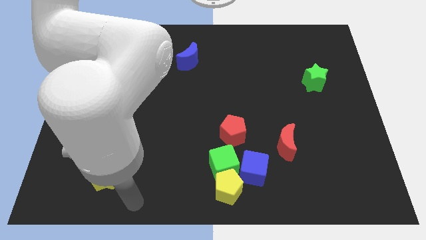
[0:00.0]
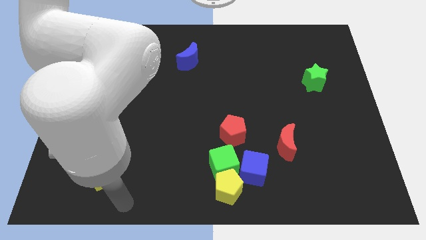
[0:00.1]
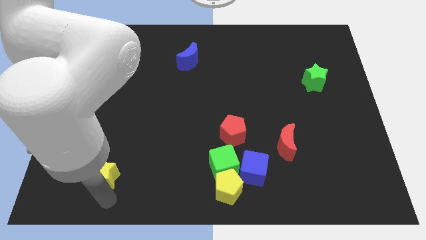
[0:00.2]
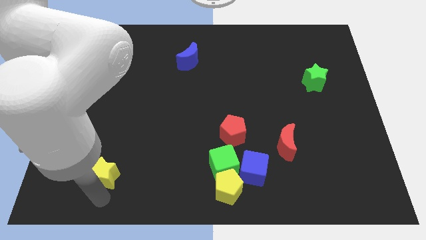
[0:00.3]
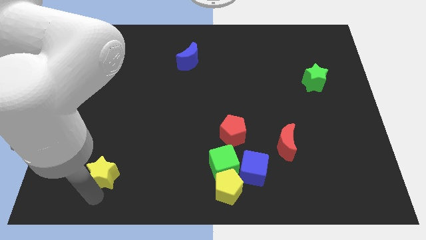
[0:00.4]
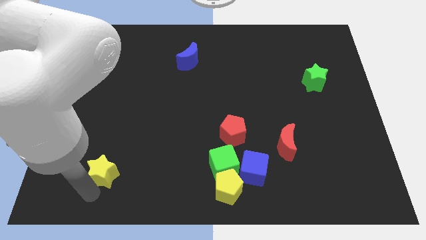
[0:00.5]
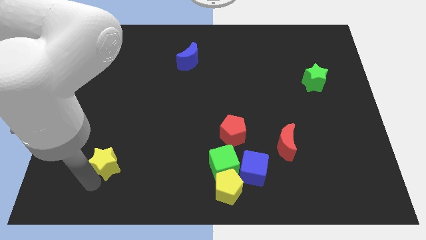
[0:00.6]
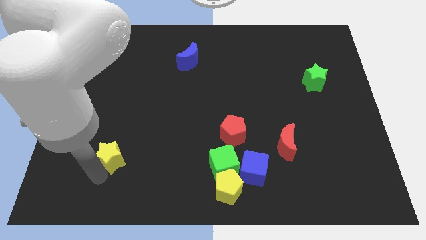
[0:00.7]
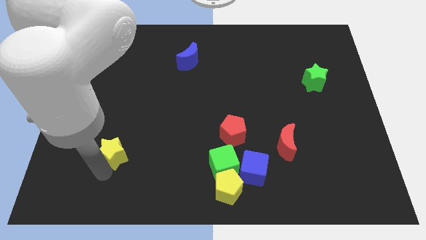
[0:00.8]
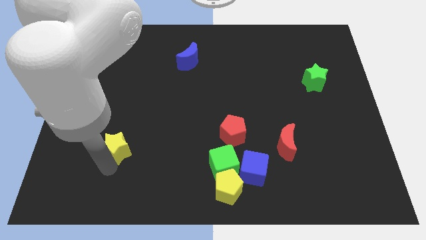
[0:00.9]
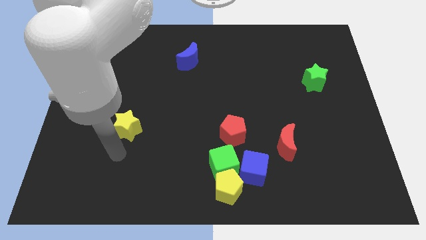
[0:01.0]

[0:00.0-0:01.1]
slide yellow star slightly upwards

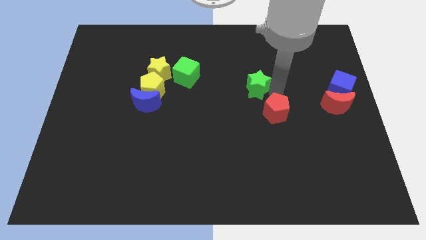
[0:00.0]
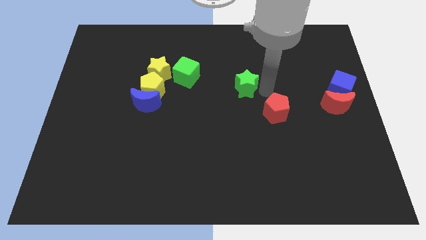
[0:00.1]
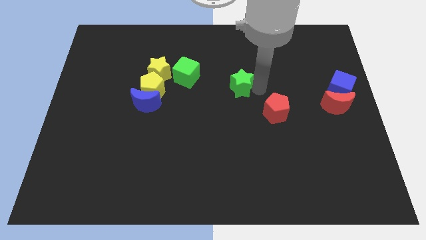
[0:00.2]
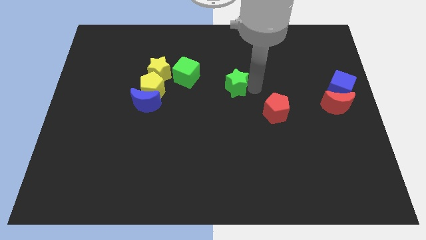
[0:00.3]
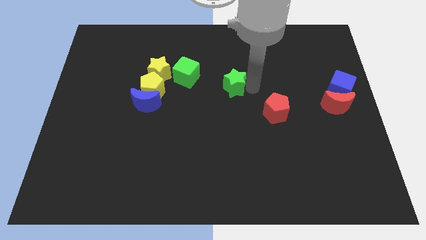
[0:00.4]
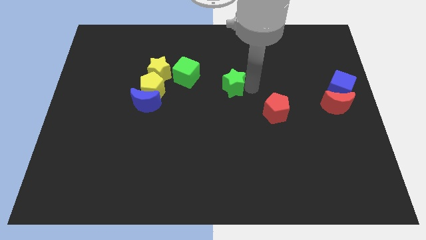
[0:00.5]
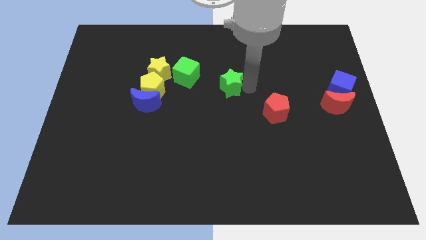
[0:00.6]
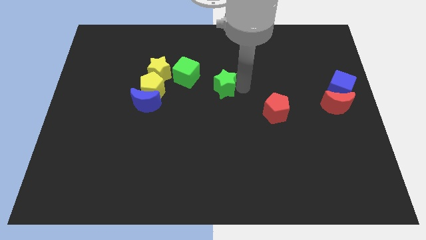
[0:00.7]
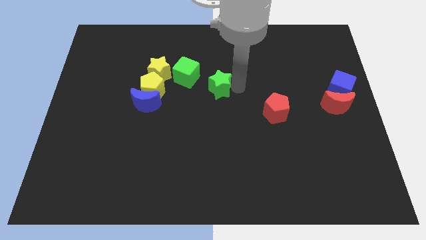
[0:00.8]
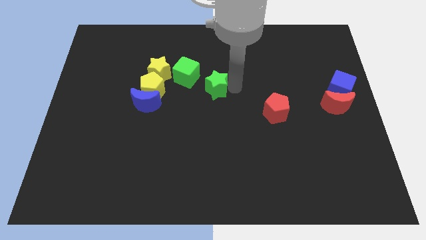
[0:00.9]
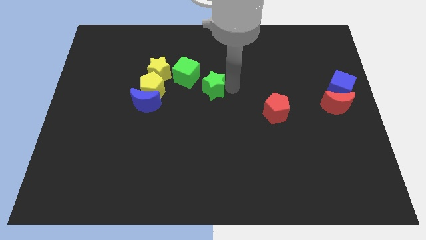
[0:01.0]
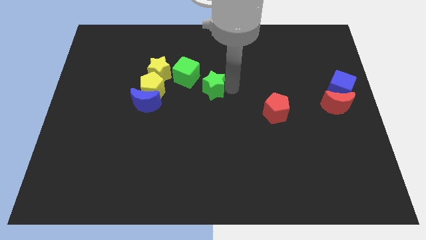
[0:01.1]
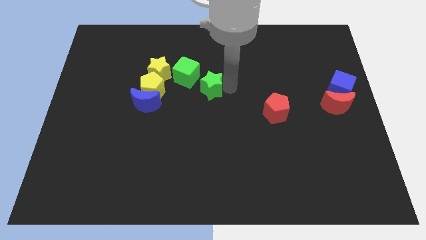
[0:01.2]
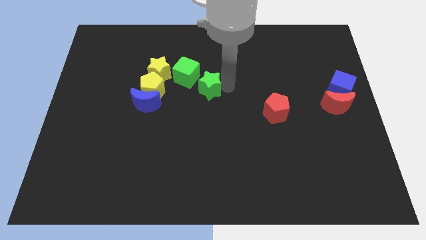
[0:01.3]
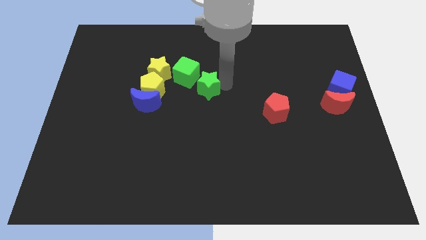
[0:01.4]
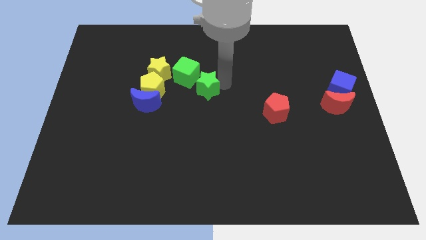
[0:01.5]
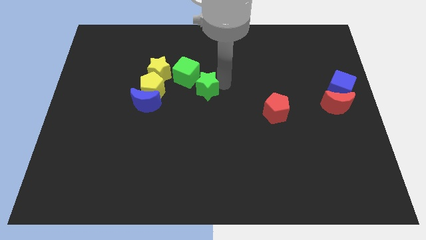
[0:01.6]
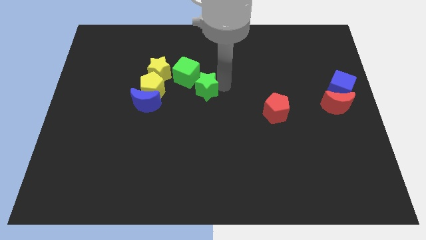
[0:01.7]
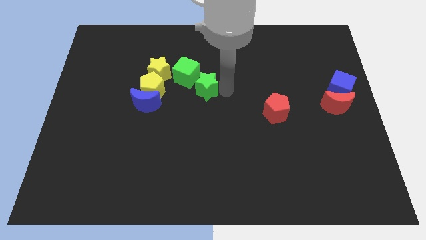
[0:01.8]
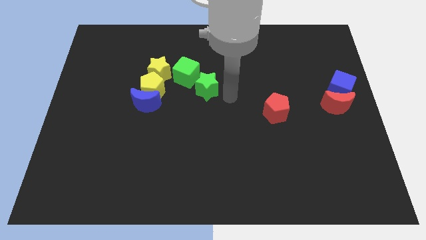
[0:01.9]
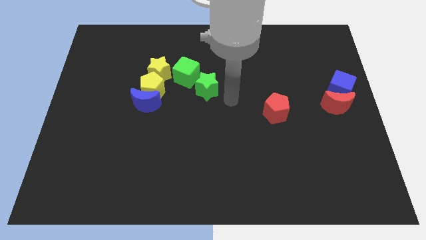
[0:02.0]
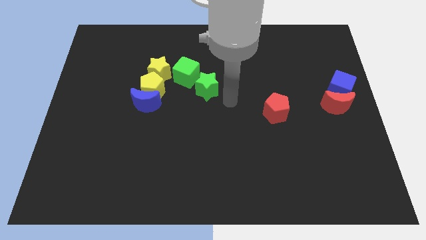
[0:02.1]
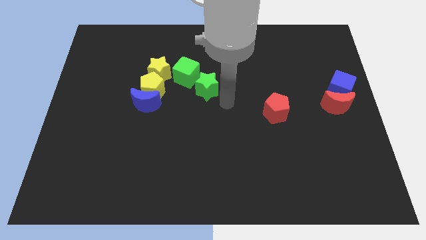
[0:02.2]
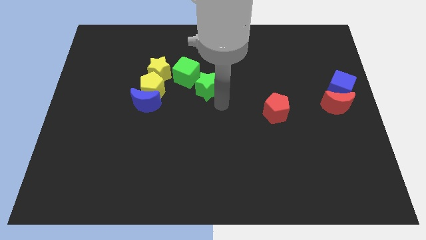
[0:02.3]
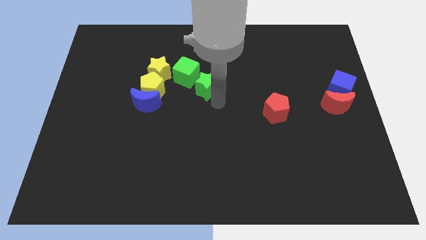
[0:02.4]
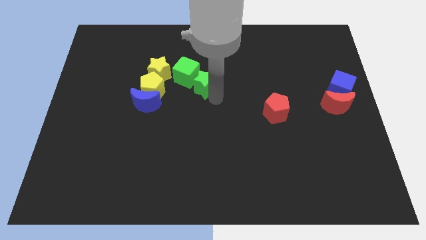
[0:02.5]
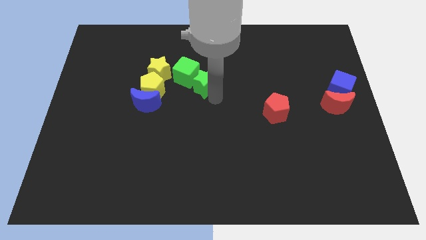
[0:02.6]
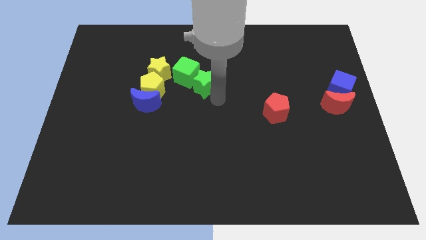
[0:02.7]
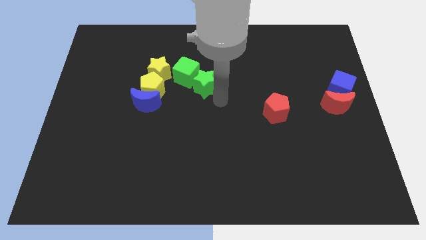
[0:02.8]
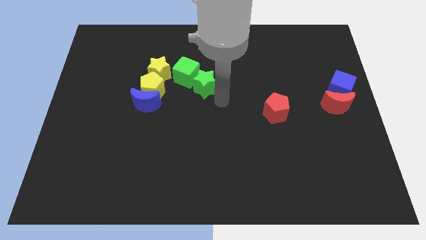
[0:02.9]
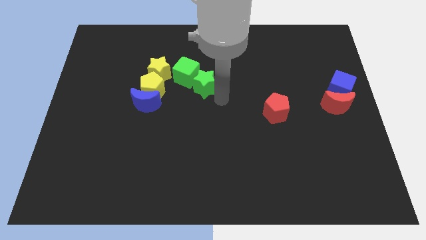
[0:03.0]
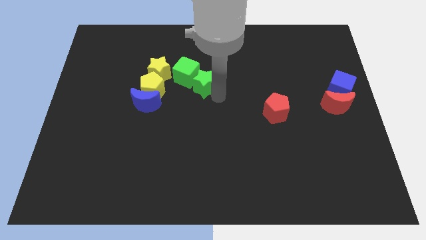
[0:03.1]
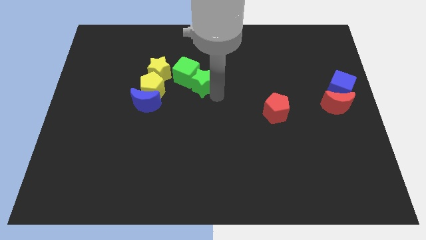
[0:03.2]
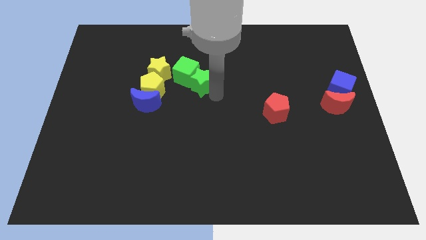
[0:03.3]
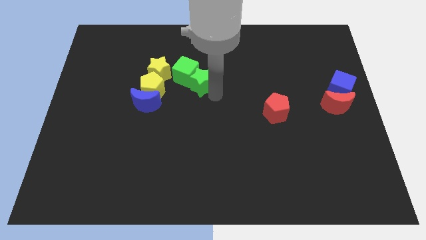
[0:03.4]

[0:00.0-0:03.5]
push the green star into the green cube

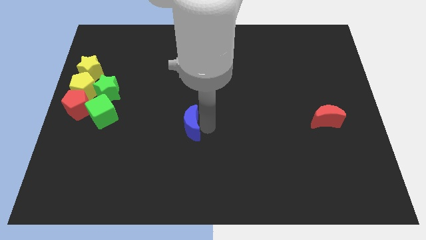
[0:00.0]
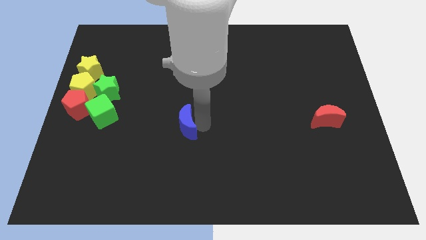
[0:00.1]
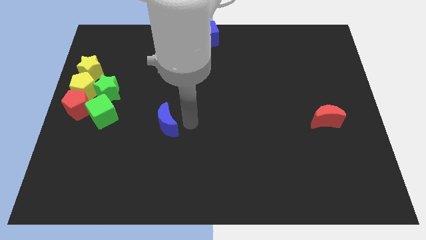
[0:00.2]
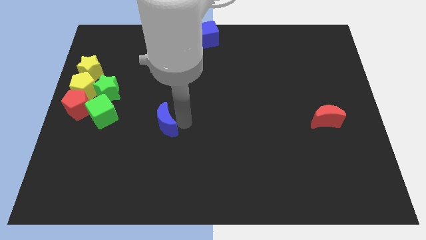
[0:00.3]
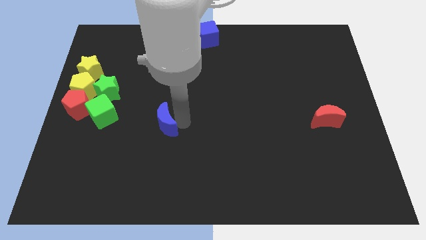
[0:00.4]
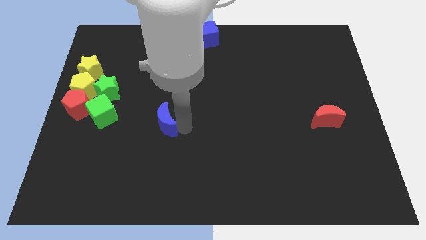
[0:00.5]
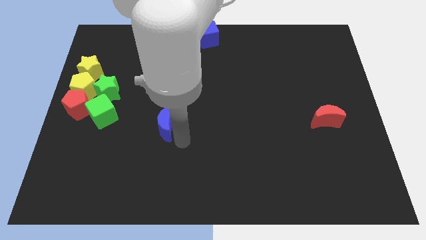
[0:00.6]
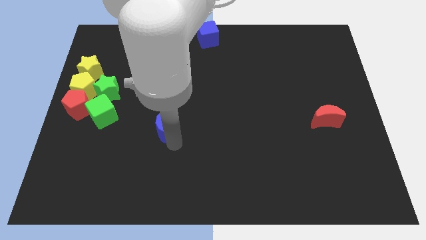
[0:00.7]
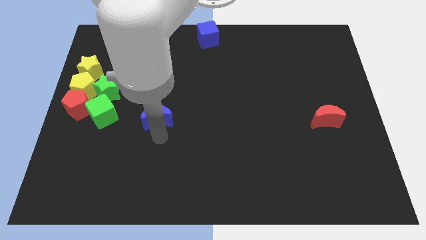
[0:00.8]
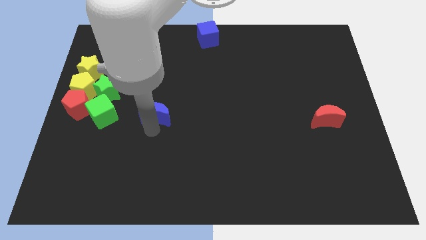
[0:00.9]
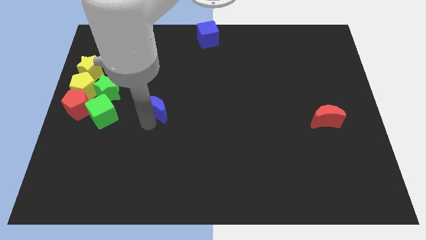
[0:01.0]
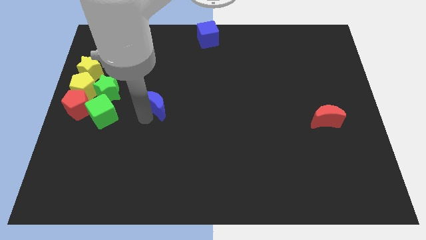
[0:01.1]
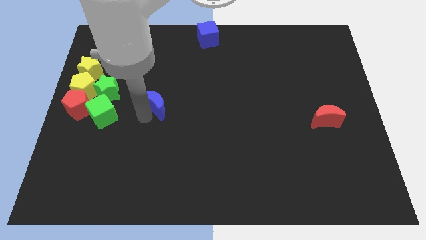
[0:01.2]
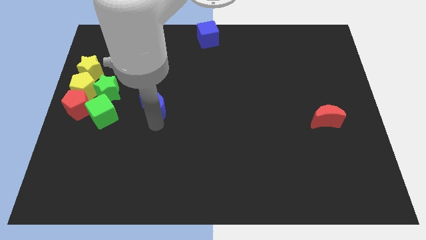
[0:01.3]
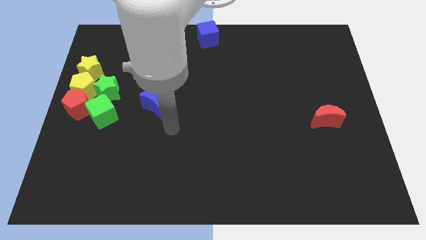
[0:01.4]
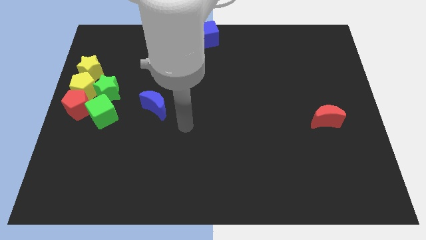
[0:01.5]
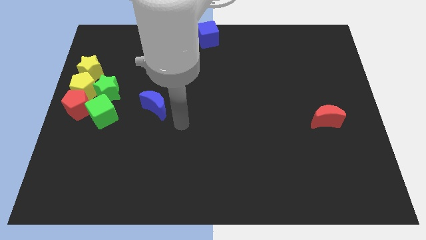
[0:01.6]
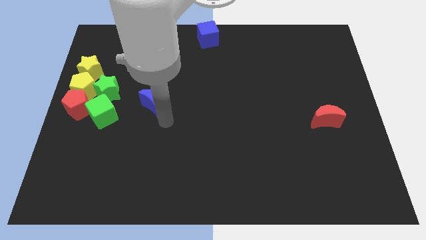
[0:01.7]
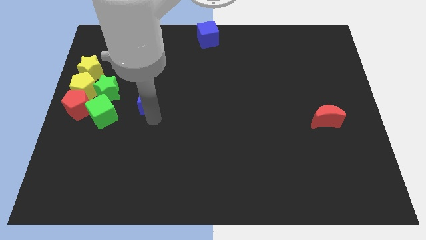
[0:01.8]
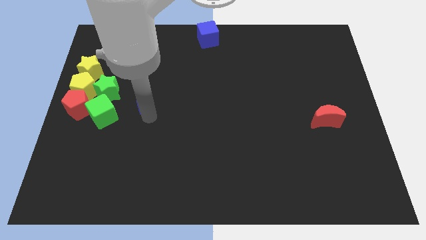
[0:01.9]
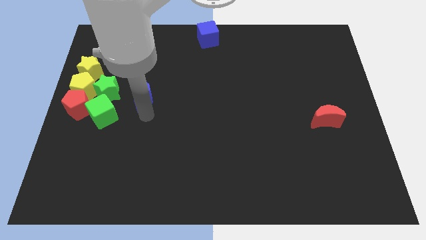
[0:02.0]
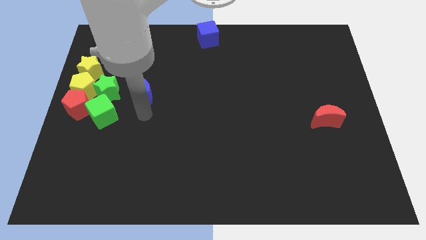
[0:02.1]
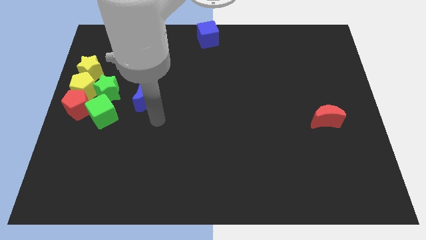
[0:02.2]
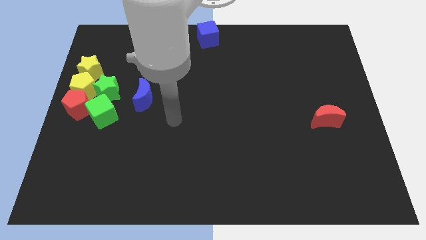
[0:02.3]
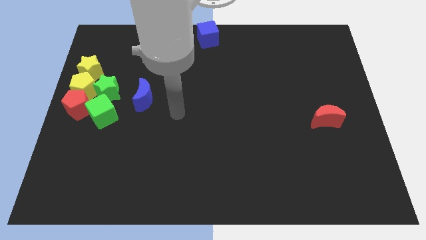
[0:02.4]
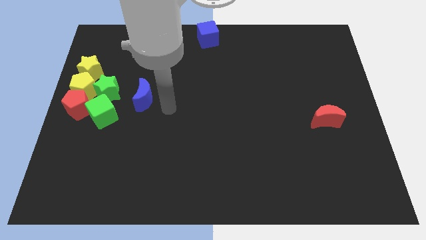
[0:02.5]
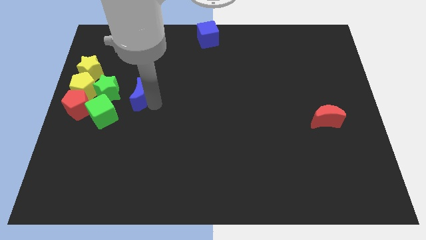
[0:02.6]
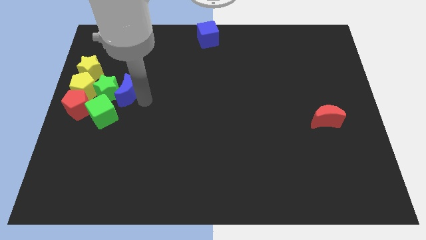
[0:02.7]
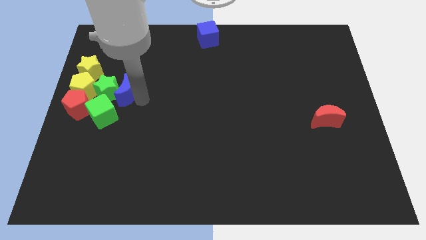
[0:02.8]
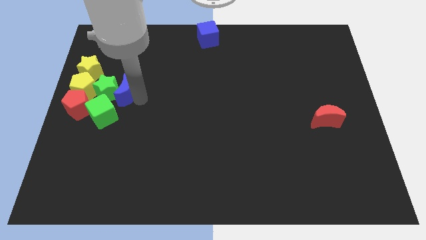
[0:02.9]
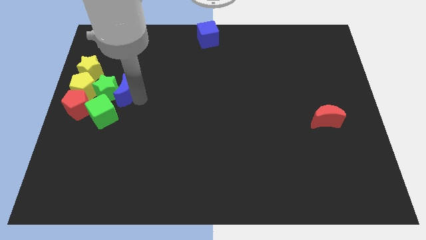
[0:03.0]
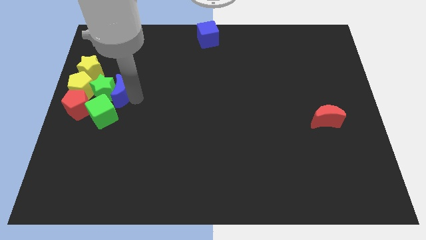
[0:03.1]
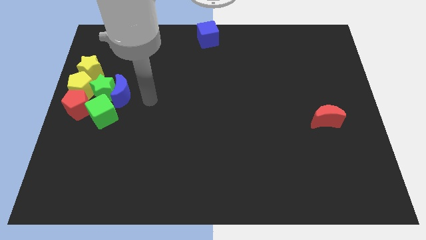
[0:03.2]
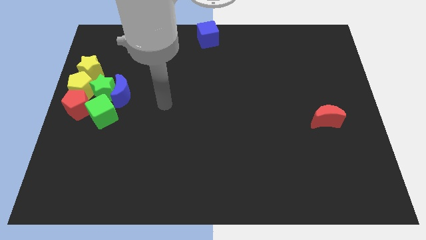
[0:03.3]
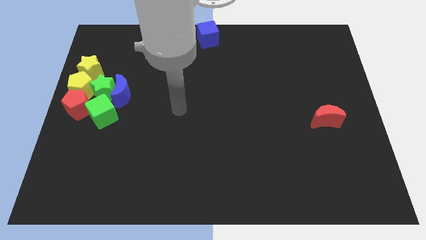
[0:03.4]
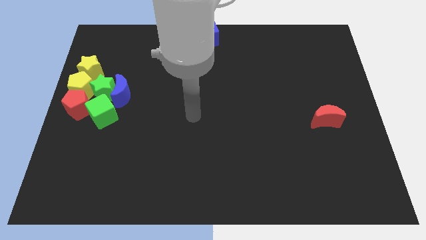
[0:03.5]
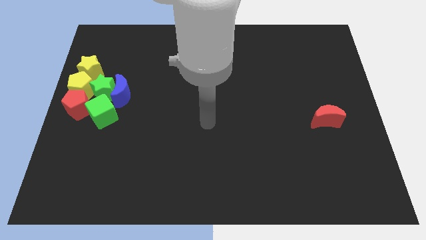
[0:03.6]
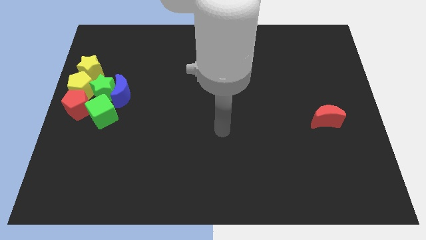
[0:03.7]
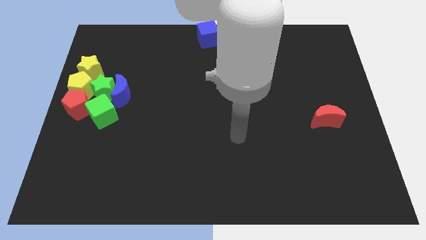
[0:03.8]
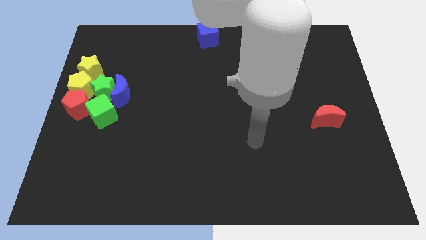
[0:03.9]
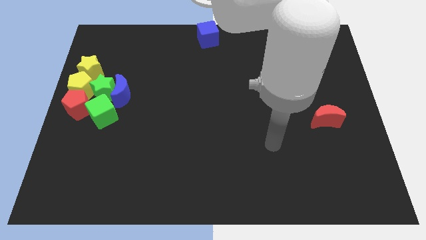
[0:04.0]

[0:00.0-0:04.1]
push blue moon in to green star

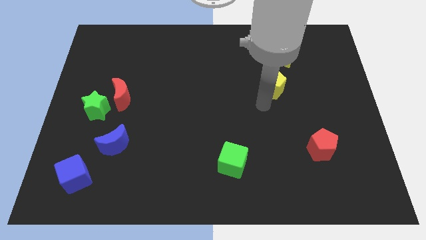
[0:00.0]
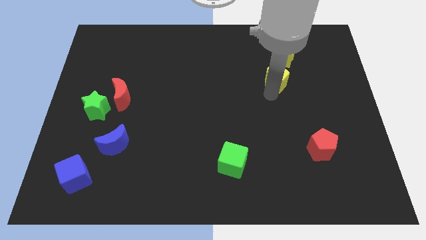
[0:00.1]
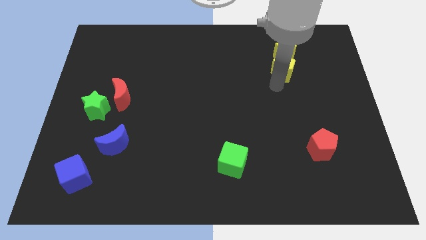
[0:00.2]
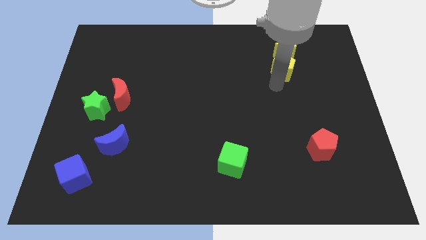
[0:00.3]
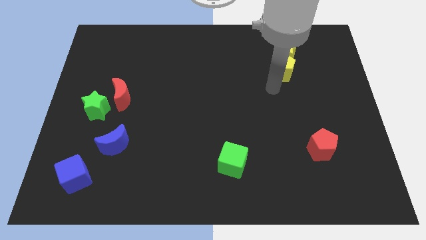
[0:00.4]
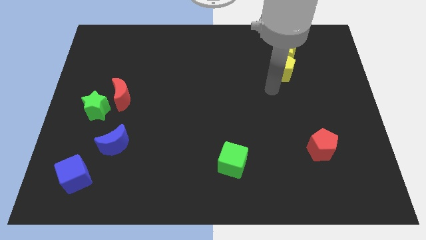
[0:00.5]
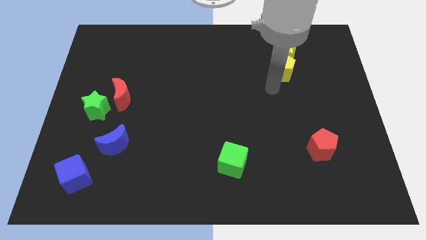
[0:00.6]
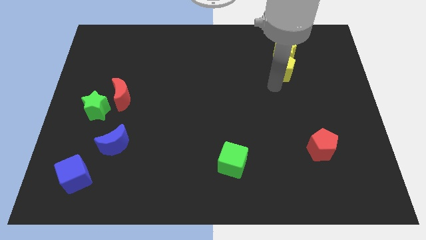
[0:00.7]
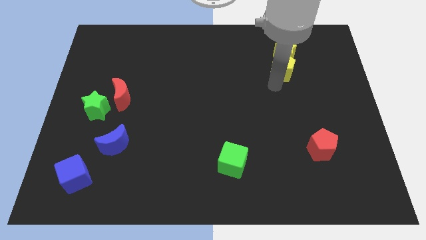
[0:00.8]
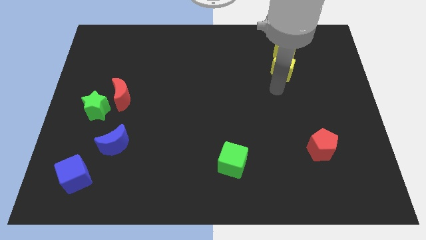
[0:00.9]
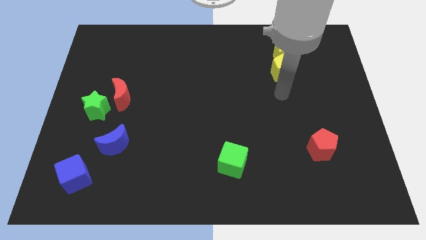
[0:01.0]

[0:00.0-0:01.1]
move the yellow pentagon to the bottom of the yellow star
